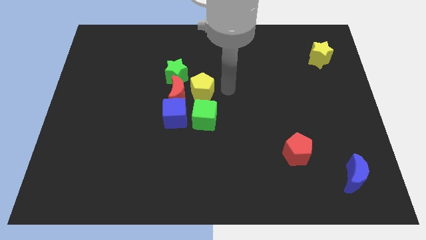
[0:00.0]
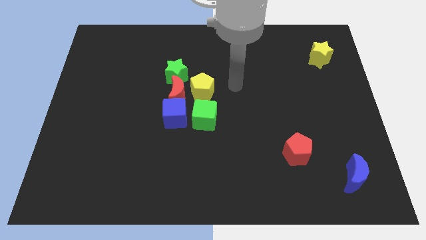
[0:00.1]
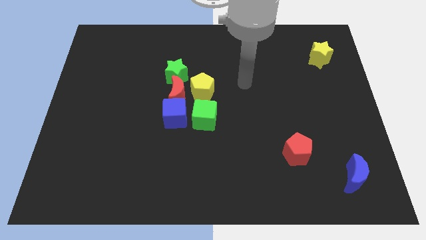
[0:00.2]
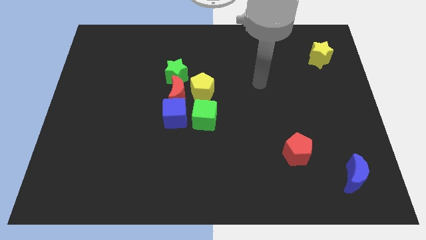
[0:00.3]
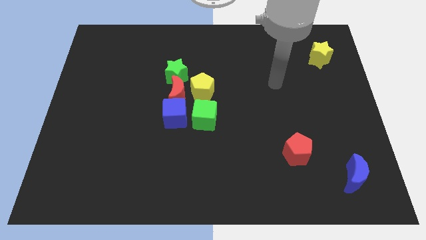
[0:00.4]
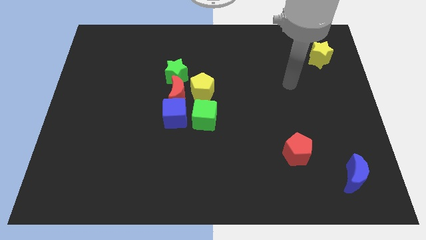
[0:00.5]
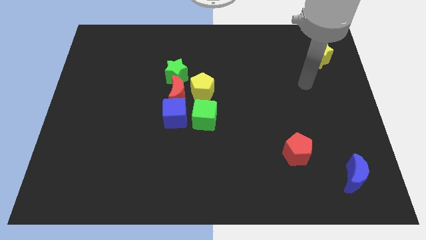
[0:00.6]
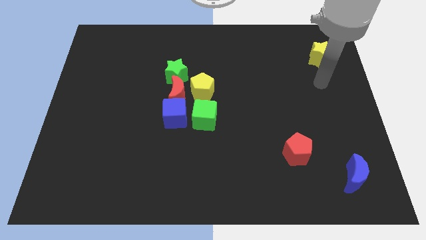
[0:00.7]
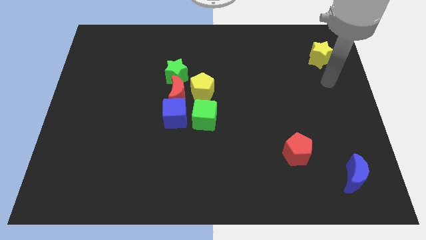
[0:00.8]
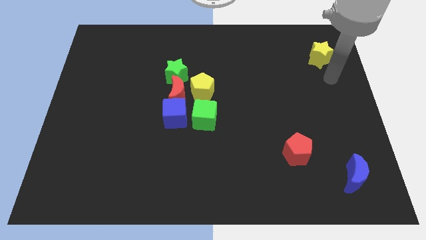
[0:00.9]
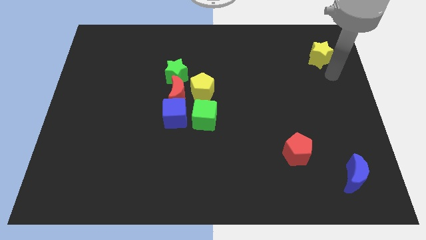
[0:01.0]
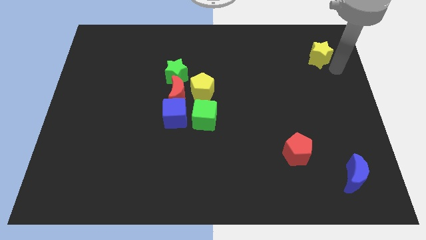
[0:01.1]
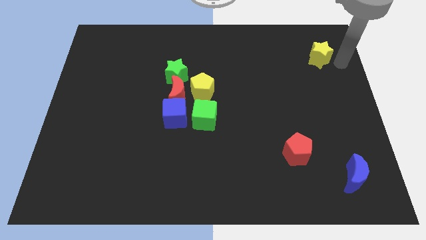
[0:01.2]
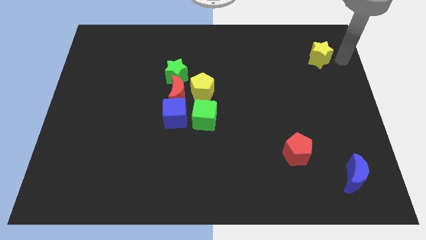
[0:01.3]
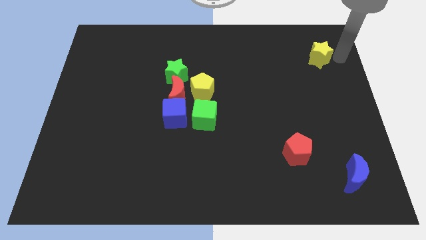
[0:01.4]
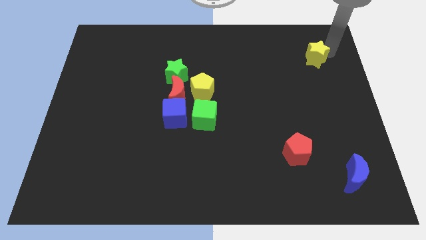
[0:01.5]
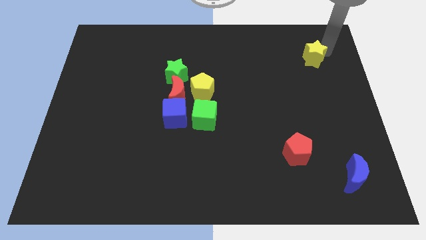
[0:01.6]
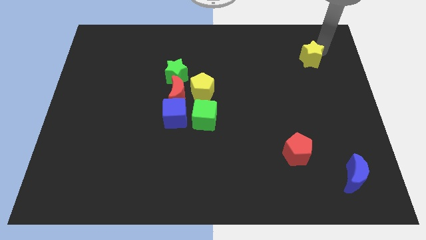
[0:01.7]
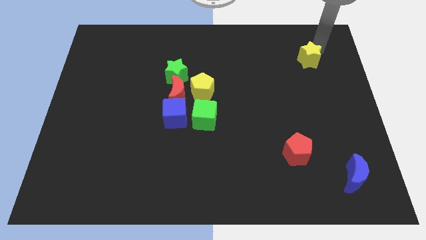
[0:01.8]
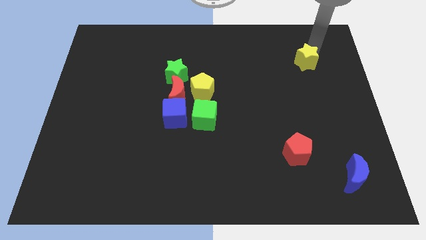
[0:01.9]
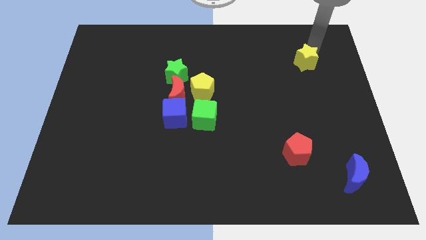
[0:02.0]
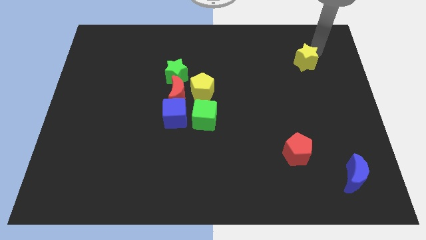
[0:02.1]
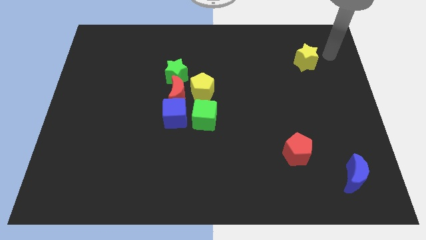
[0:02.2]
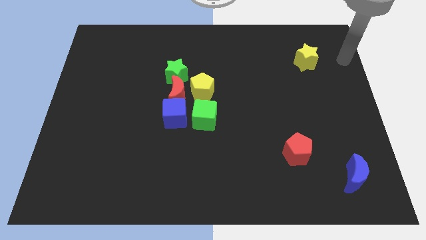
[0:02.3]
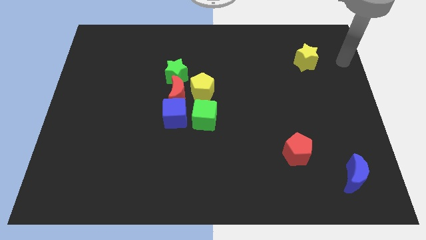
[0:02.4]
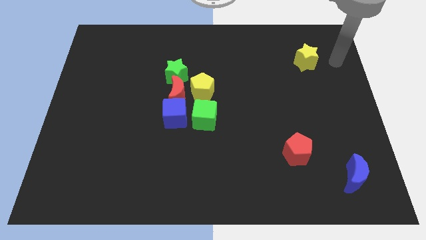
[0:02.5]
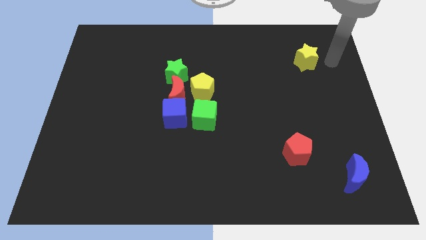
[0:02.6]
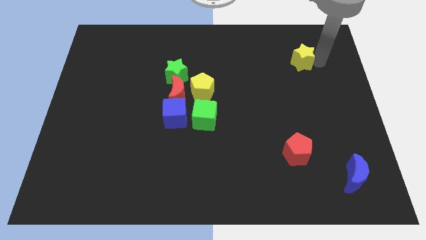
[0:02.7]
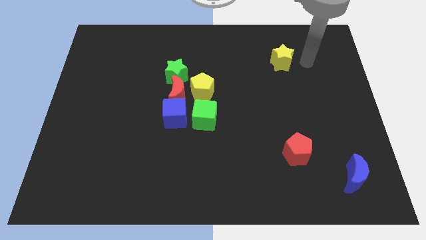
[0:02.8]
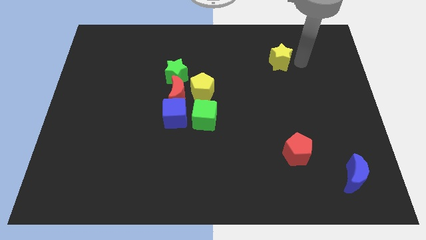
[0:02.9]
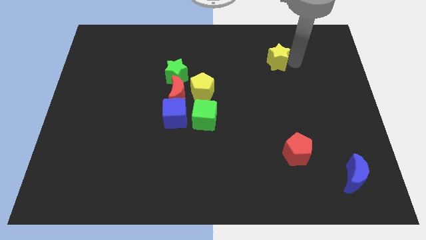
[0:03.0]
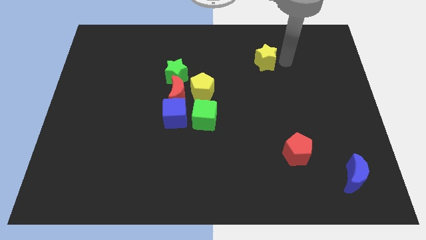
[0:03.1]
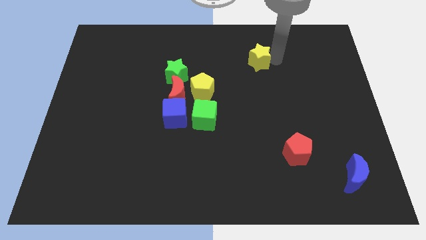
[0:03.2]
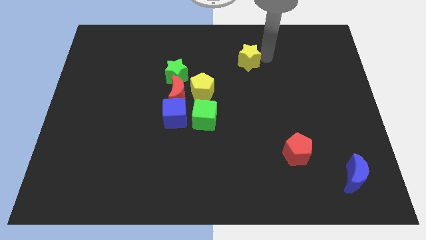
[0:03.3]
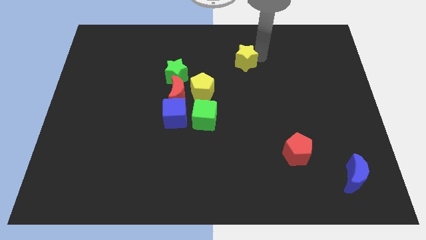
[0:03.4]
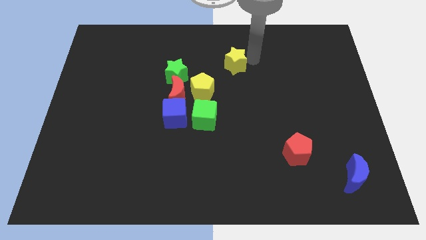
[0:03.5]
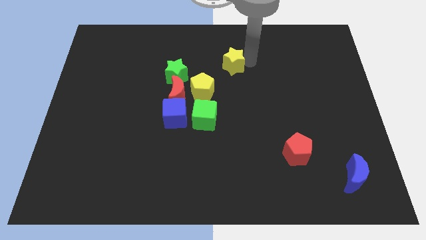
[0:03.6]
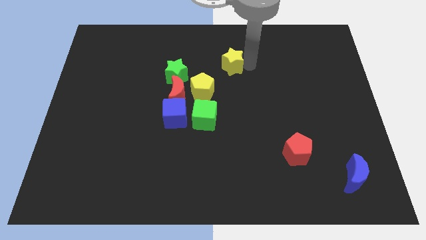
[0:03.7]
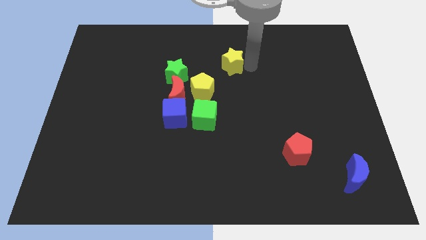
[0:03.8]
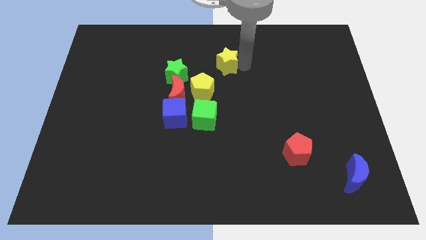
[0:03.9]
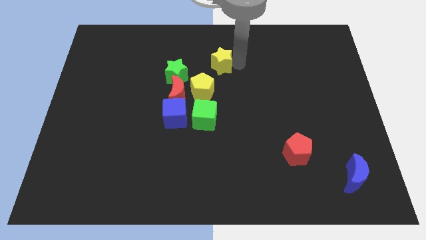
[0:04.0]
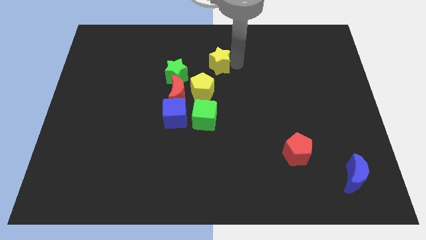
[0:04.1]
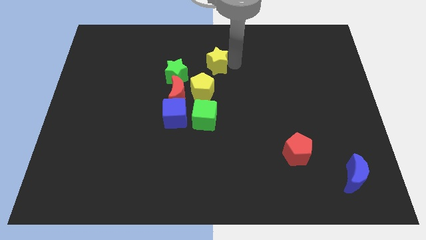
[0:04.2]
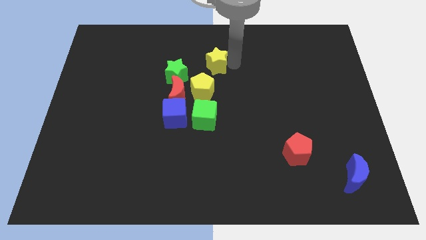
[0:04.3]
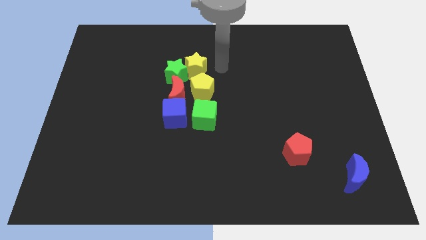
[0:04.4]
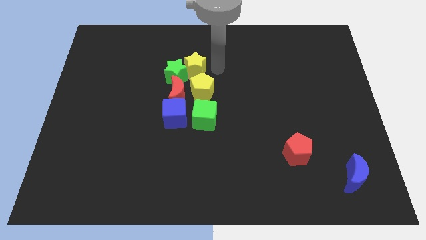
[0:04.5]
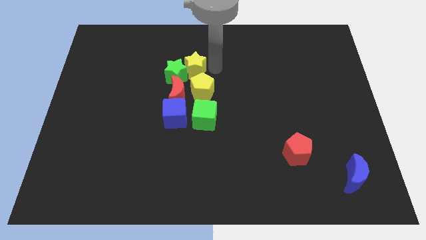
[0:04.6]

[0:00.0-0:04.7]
place the yellow star above the yellow pentagon

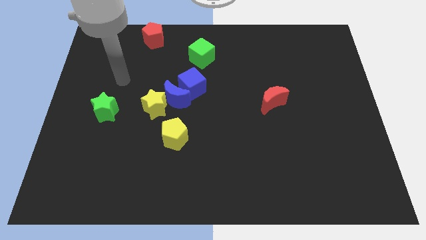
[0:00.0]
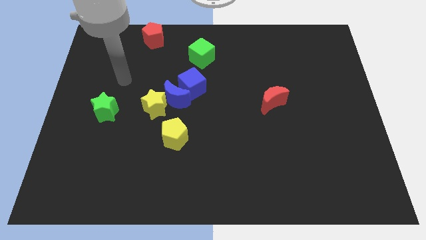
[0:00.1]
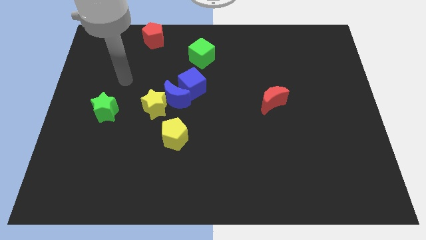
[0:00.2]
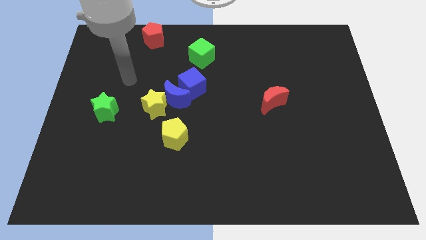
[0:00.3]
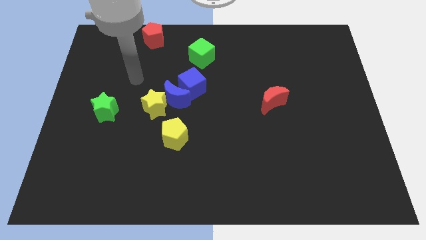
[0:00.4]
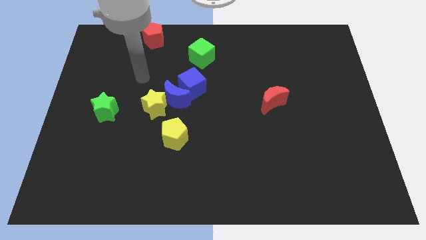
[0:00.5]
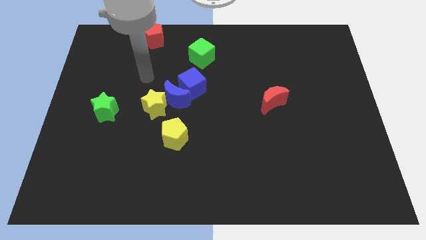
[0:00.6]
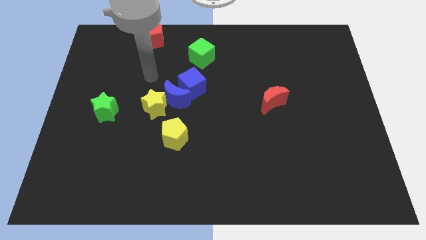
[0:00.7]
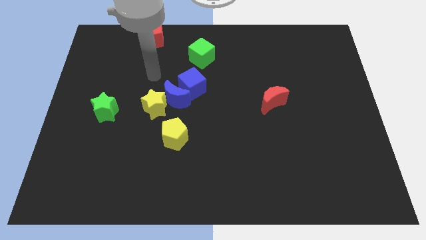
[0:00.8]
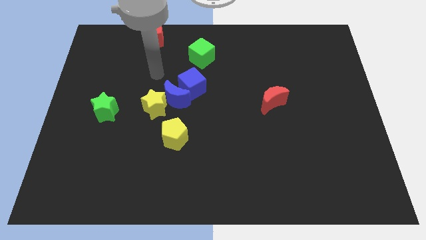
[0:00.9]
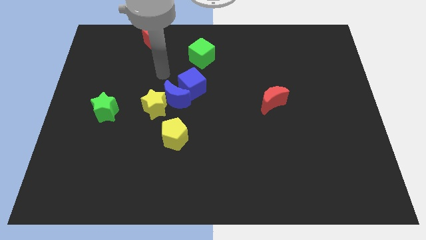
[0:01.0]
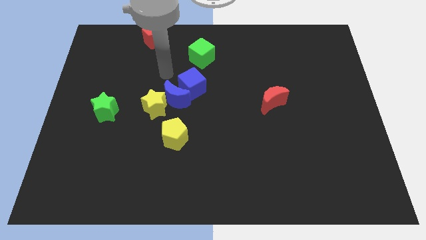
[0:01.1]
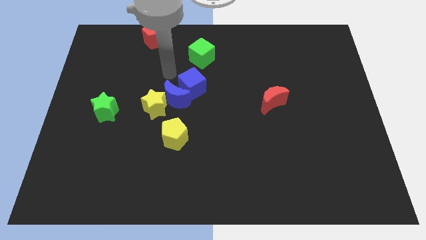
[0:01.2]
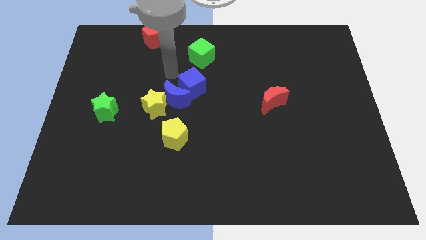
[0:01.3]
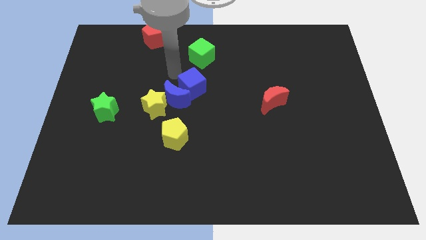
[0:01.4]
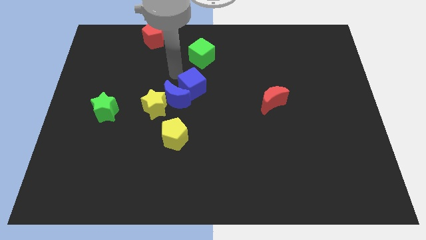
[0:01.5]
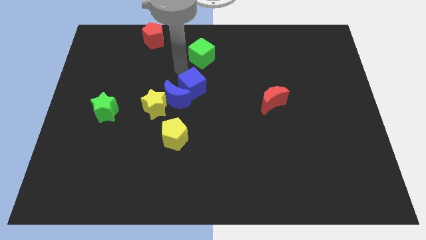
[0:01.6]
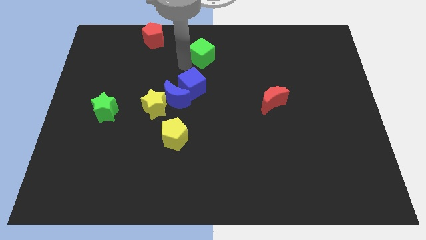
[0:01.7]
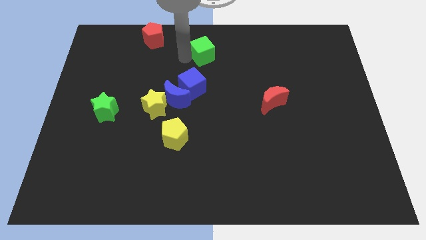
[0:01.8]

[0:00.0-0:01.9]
tap the green cube

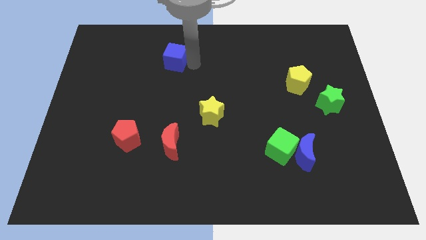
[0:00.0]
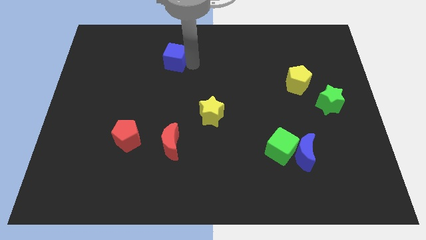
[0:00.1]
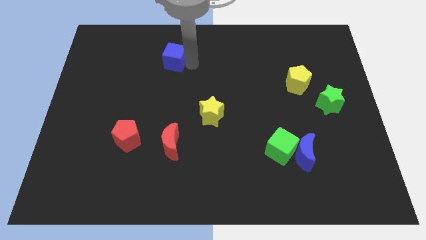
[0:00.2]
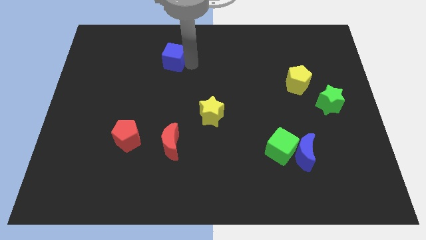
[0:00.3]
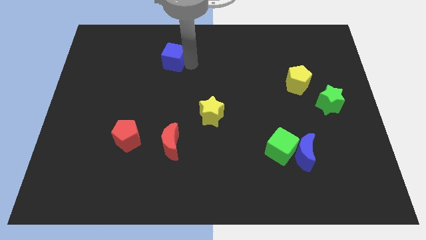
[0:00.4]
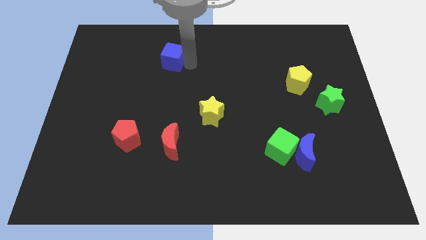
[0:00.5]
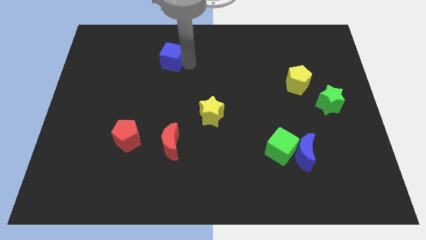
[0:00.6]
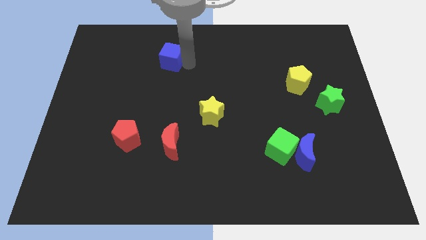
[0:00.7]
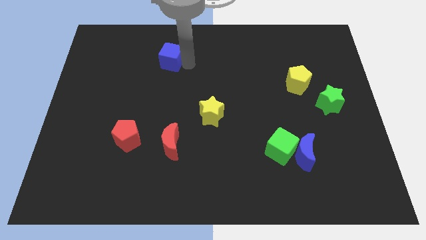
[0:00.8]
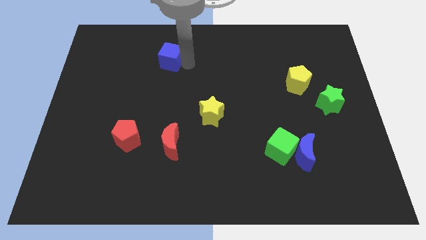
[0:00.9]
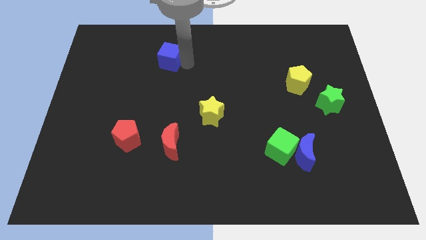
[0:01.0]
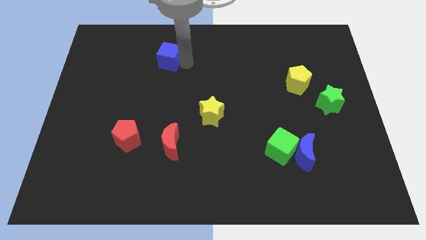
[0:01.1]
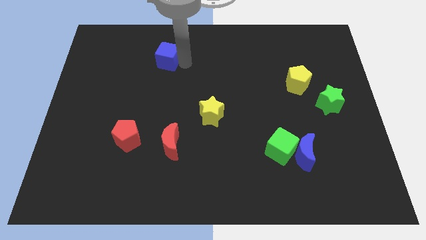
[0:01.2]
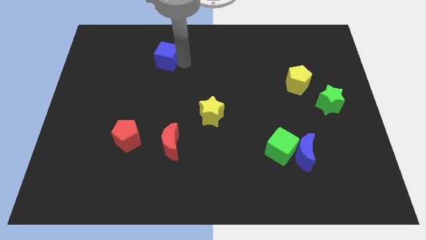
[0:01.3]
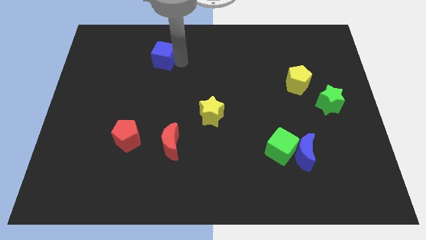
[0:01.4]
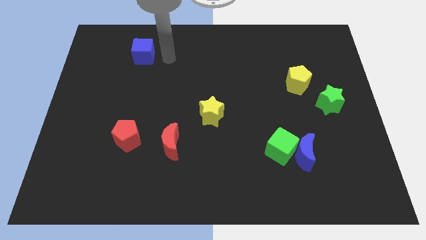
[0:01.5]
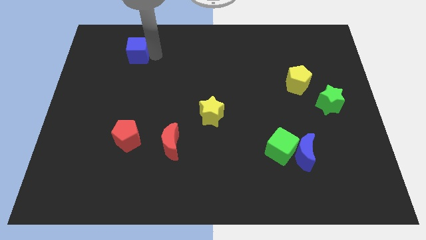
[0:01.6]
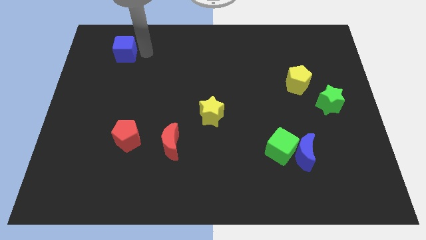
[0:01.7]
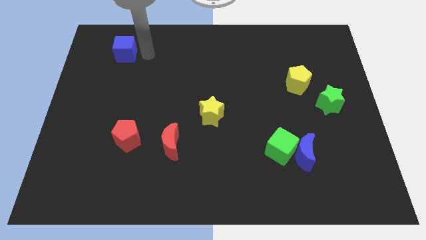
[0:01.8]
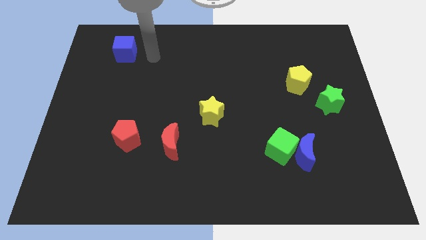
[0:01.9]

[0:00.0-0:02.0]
place blue cube to the top of red pentagon
